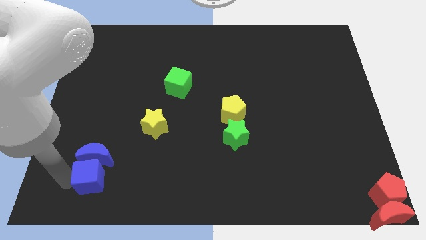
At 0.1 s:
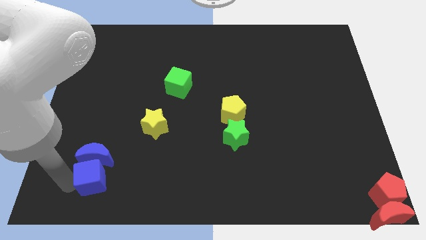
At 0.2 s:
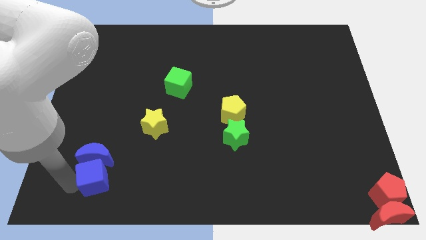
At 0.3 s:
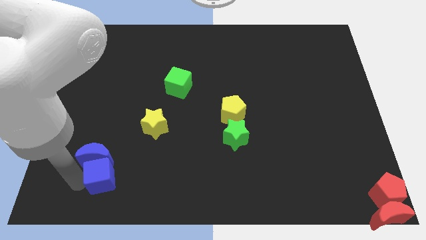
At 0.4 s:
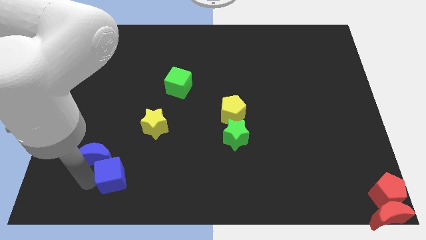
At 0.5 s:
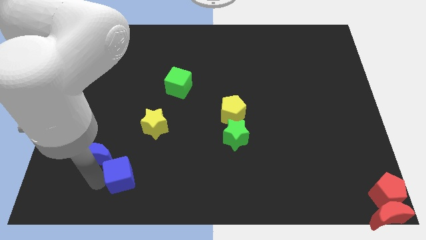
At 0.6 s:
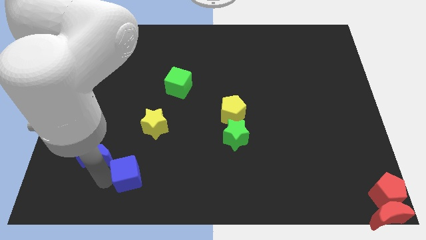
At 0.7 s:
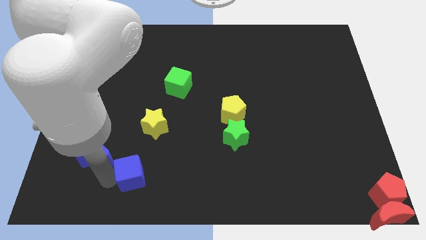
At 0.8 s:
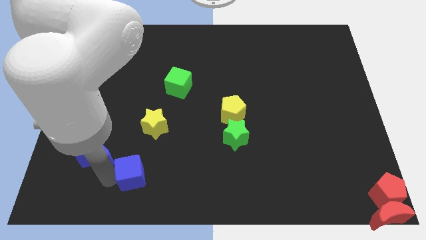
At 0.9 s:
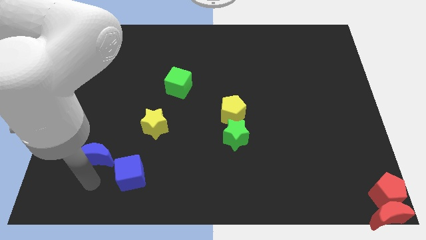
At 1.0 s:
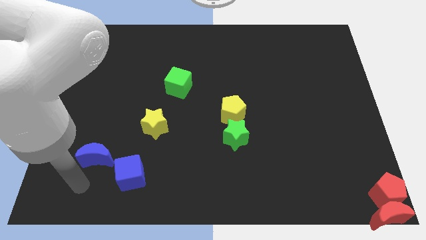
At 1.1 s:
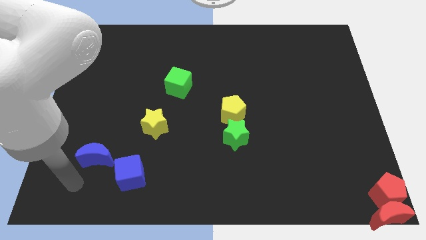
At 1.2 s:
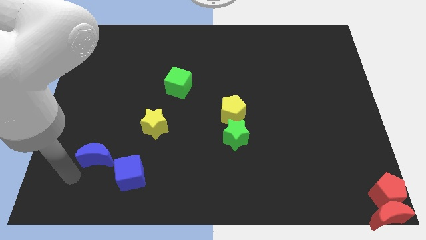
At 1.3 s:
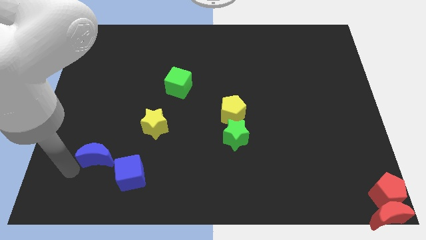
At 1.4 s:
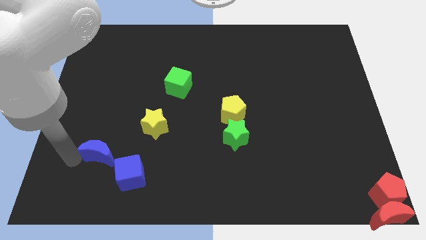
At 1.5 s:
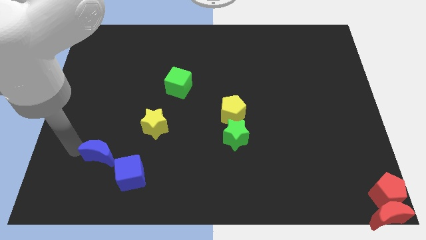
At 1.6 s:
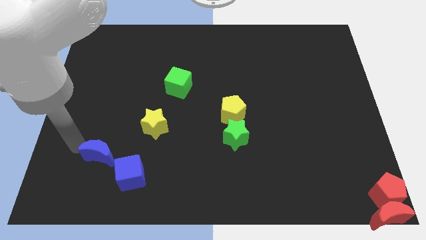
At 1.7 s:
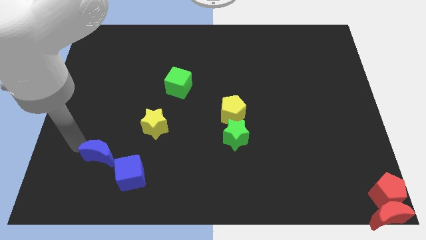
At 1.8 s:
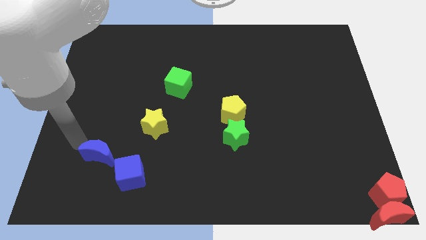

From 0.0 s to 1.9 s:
move the blue cube diagonally right to the blue moon

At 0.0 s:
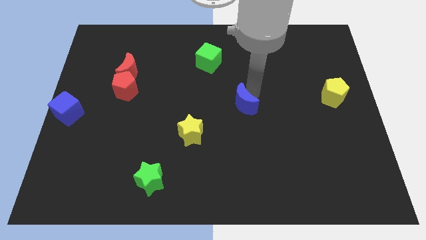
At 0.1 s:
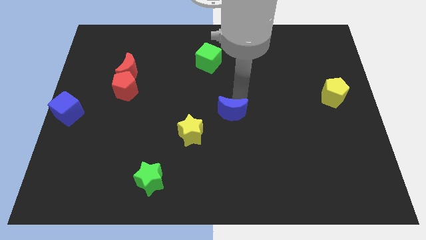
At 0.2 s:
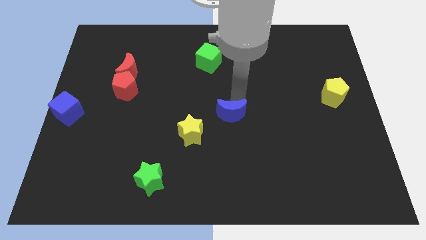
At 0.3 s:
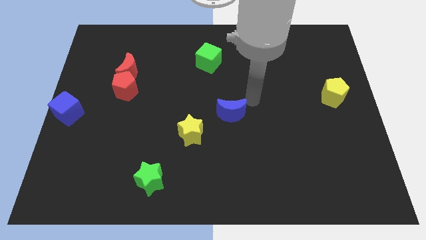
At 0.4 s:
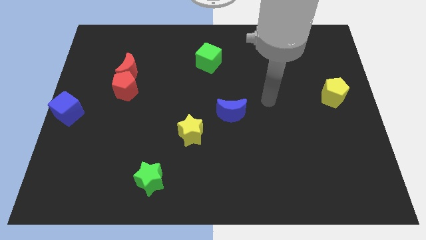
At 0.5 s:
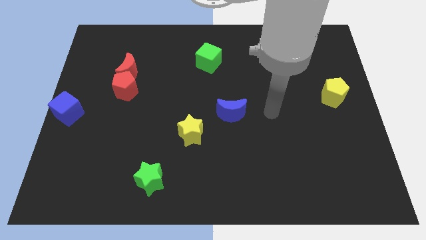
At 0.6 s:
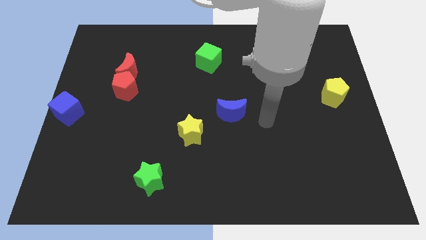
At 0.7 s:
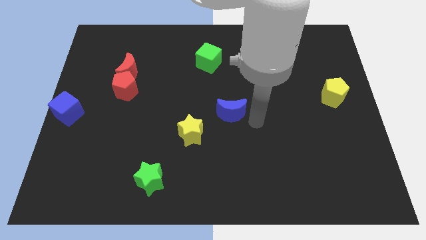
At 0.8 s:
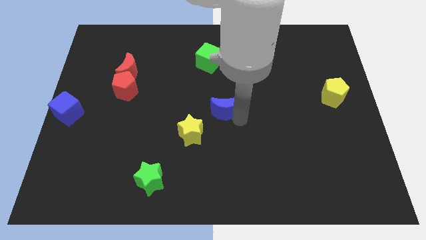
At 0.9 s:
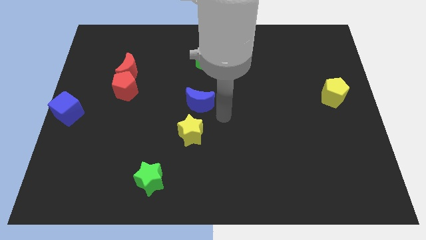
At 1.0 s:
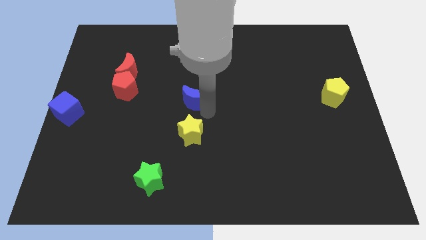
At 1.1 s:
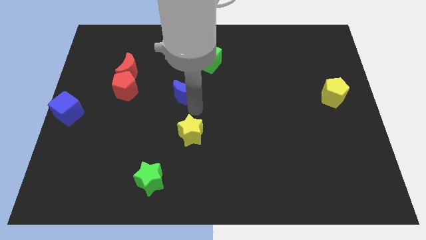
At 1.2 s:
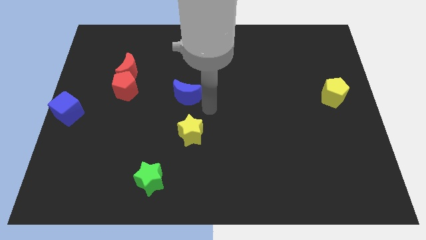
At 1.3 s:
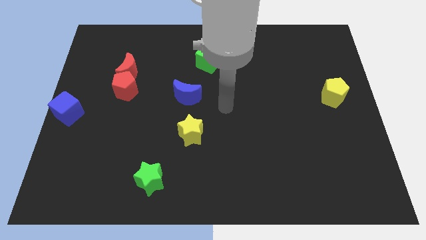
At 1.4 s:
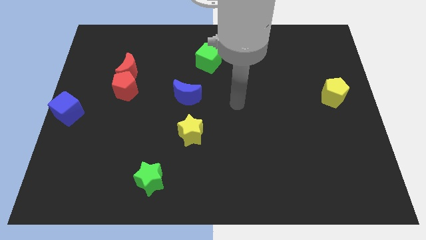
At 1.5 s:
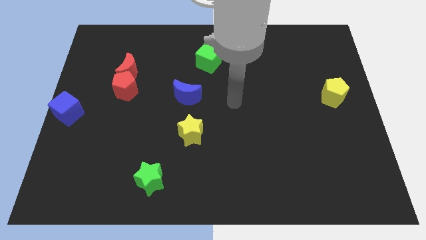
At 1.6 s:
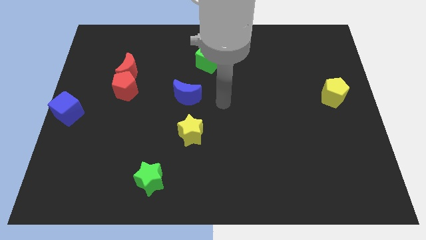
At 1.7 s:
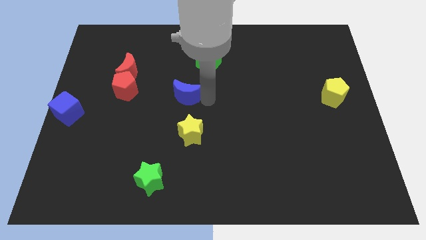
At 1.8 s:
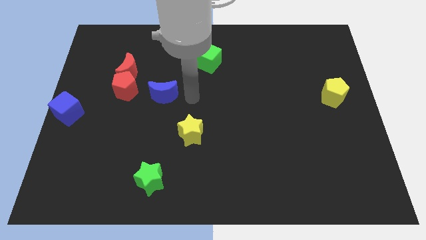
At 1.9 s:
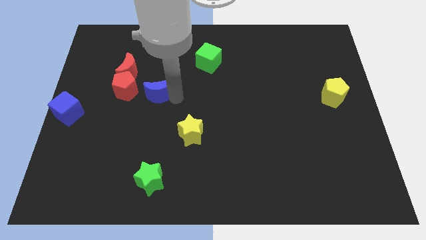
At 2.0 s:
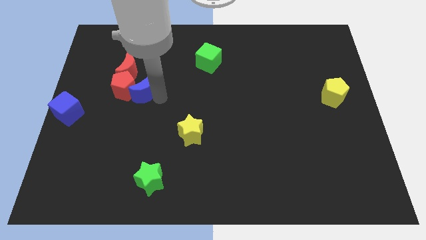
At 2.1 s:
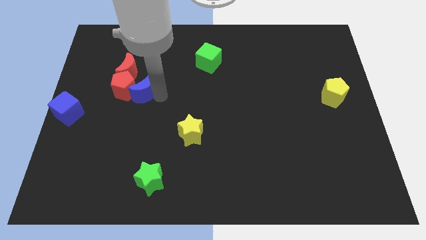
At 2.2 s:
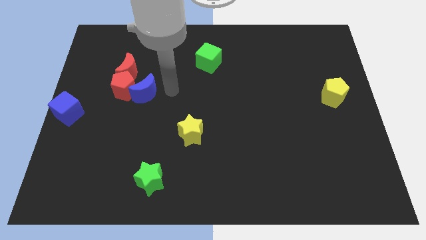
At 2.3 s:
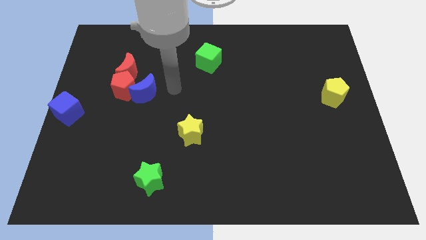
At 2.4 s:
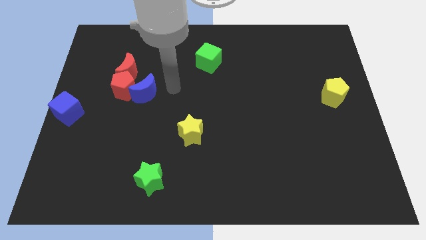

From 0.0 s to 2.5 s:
move the blue moon into the red pentagon

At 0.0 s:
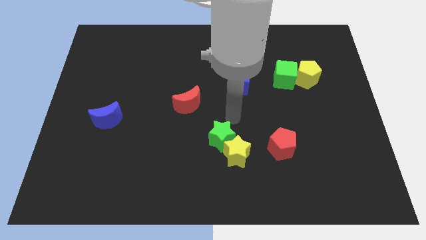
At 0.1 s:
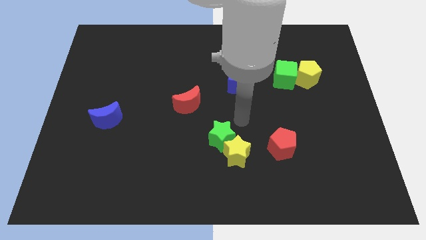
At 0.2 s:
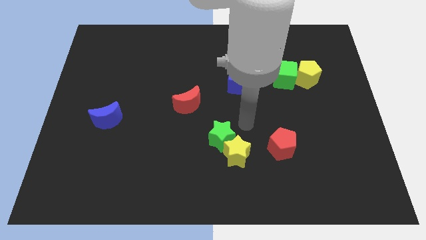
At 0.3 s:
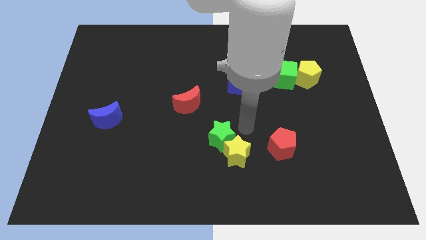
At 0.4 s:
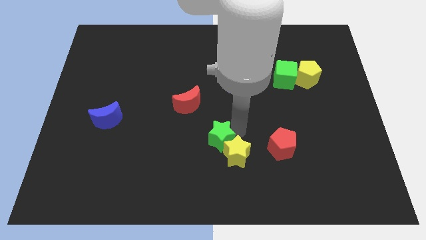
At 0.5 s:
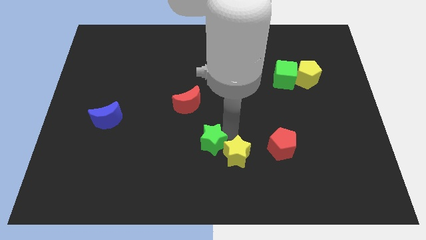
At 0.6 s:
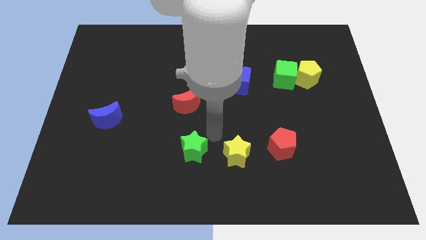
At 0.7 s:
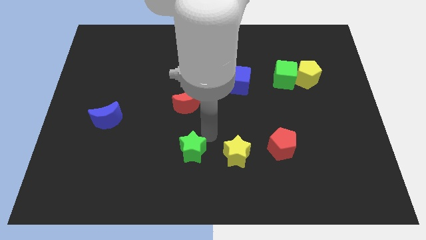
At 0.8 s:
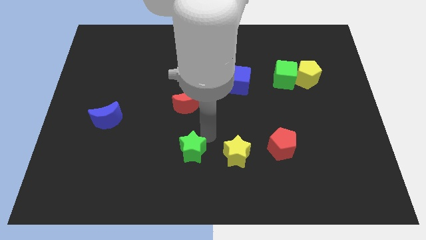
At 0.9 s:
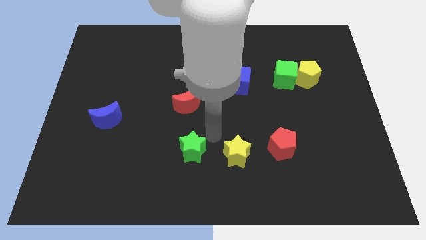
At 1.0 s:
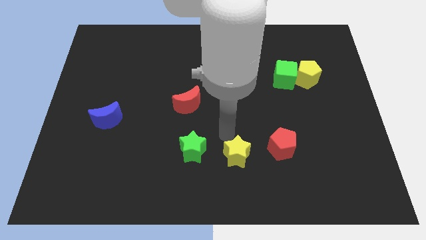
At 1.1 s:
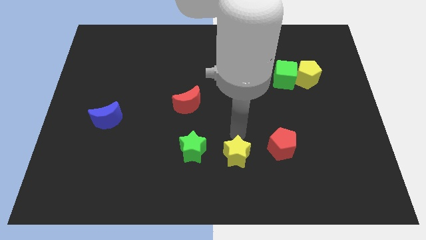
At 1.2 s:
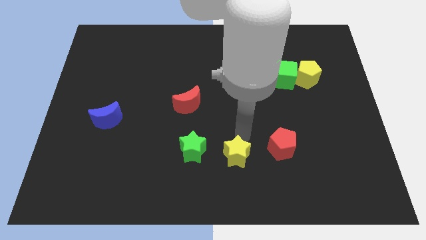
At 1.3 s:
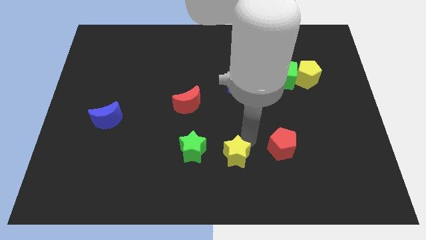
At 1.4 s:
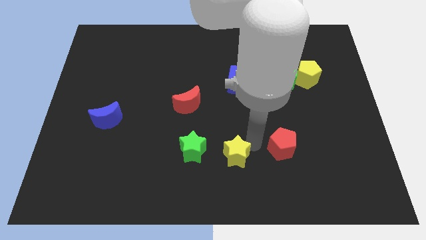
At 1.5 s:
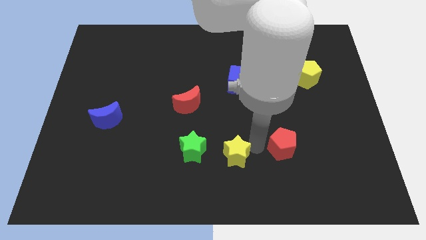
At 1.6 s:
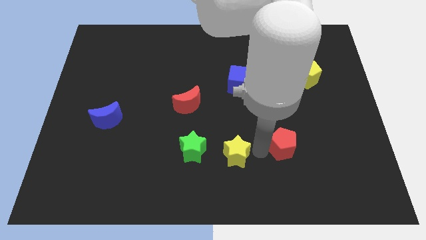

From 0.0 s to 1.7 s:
move green star adjacent to yellow star

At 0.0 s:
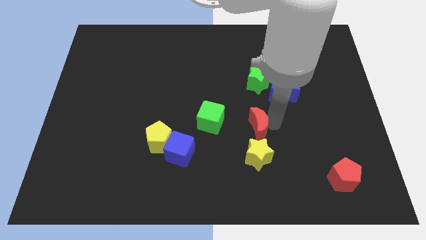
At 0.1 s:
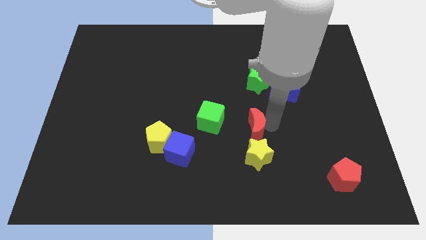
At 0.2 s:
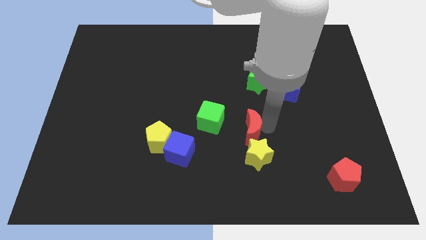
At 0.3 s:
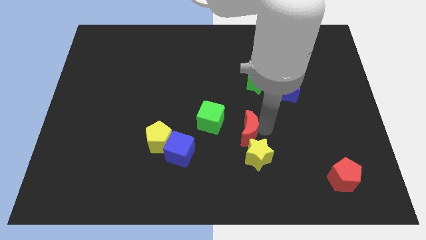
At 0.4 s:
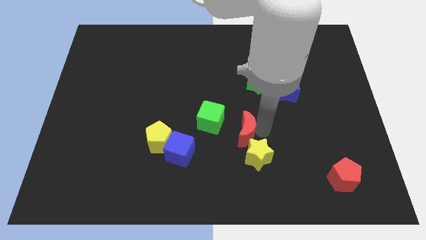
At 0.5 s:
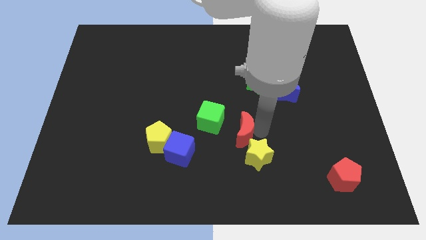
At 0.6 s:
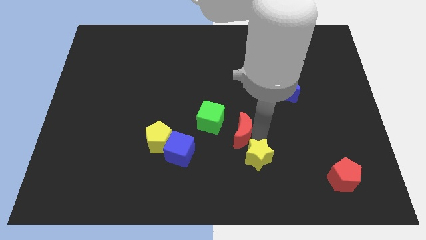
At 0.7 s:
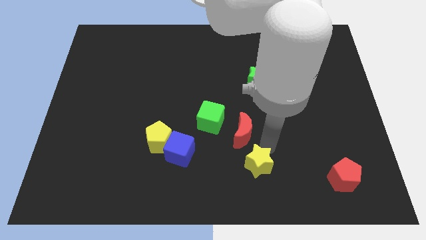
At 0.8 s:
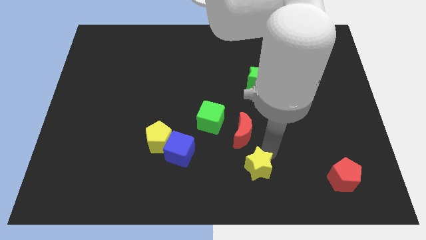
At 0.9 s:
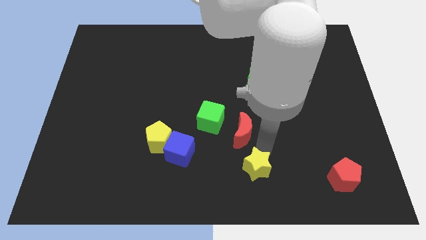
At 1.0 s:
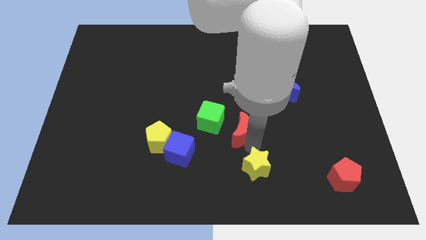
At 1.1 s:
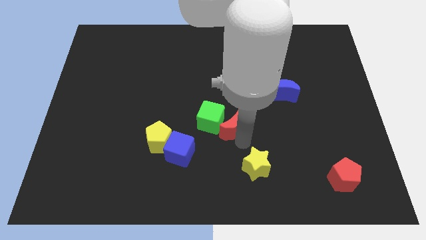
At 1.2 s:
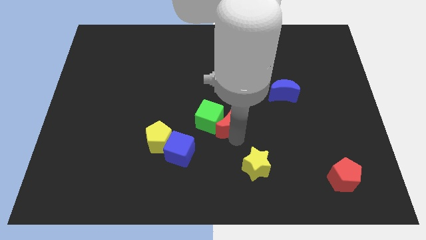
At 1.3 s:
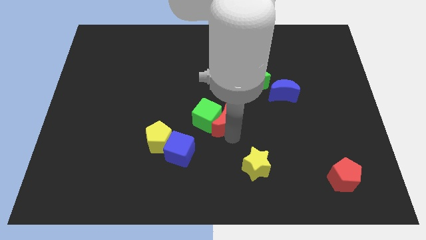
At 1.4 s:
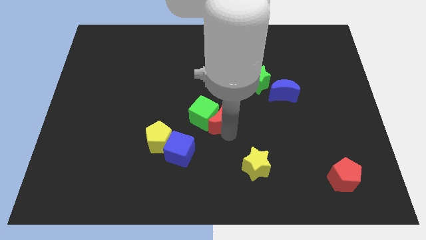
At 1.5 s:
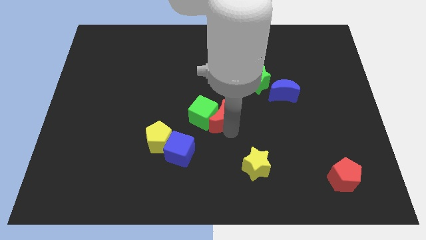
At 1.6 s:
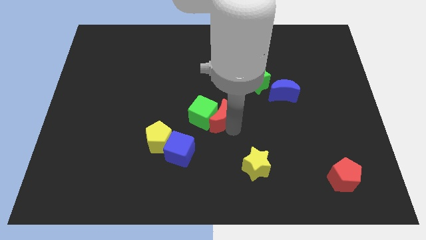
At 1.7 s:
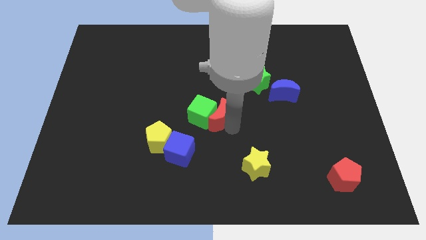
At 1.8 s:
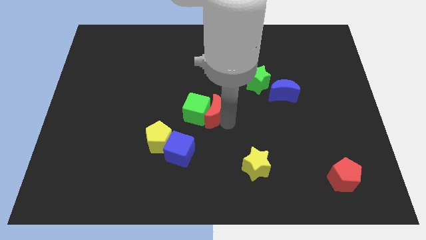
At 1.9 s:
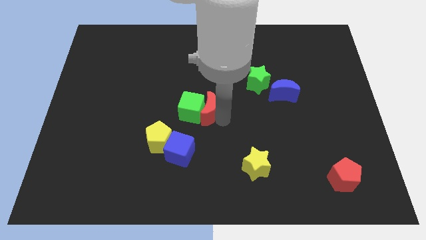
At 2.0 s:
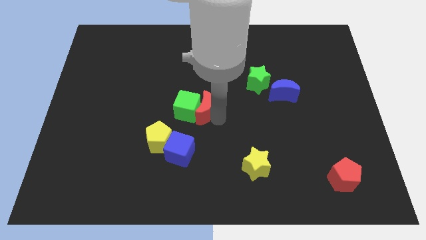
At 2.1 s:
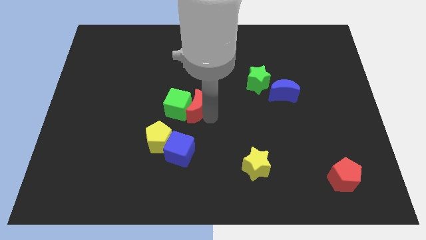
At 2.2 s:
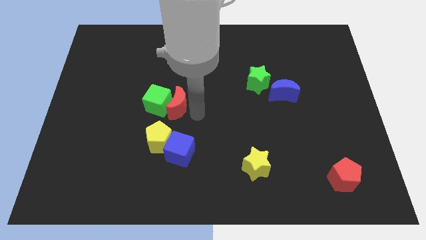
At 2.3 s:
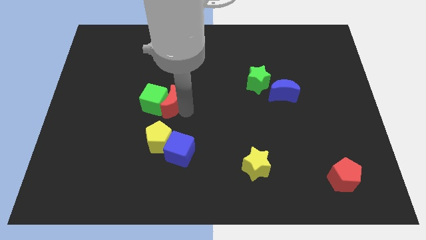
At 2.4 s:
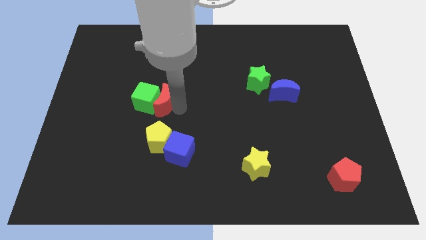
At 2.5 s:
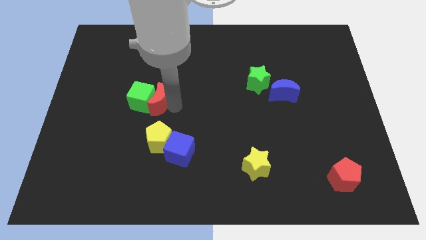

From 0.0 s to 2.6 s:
move red moon into green cube

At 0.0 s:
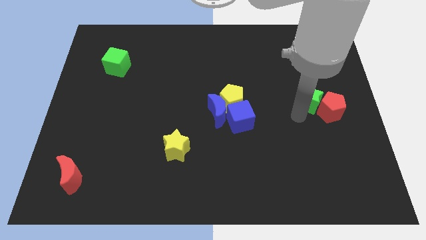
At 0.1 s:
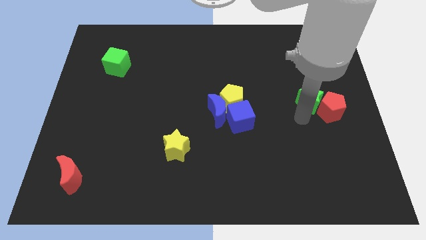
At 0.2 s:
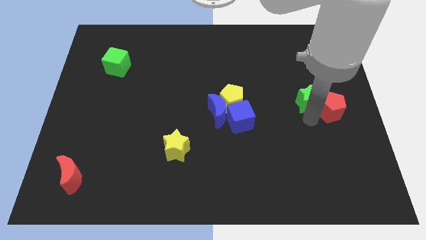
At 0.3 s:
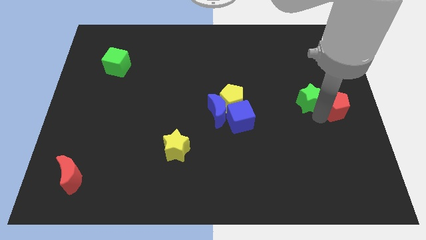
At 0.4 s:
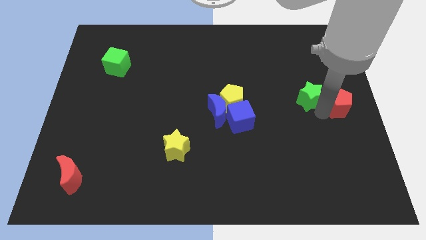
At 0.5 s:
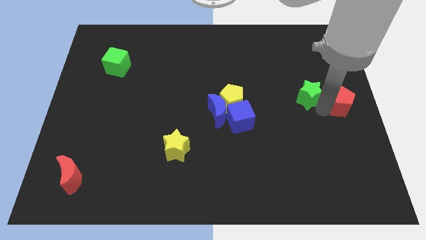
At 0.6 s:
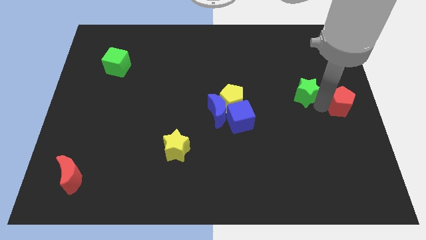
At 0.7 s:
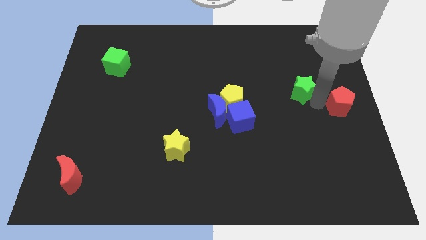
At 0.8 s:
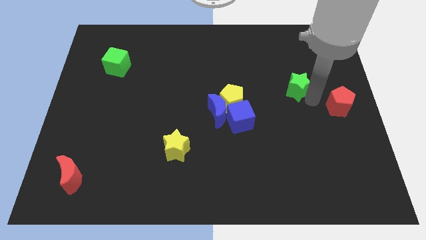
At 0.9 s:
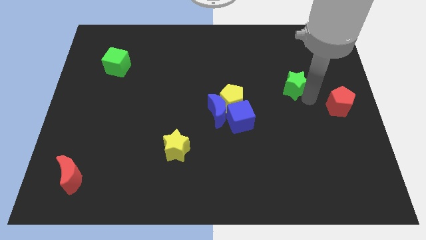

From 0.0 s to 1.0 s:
separate green star from red pentagon
